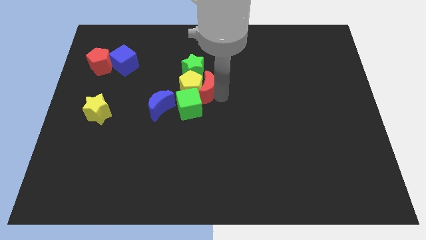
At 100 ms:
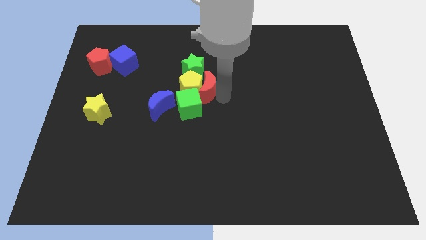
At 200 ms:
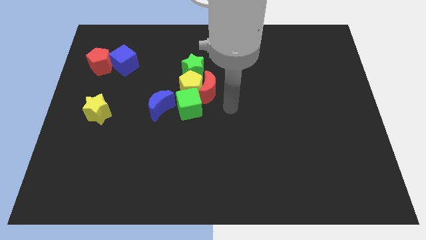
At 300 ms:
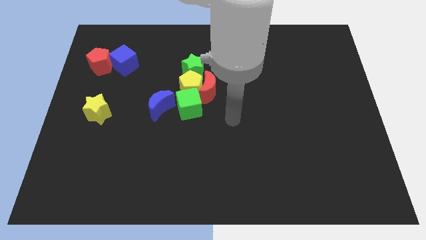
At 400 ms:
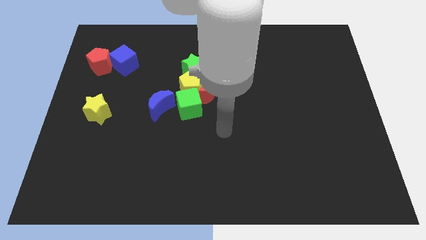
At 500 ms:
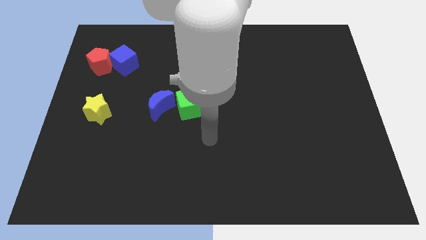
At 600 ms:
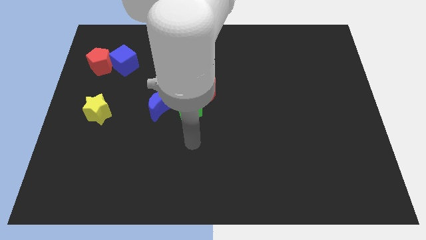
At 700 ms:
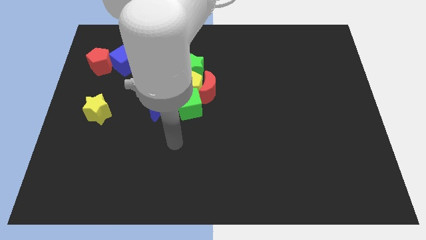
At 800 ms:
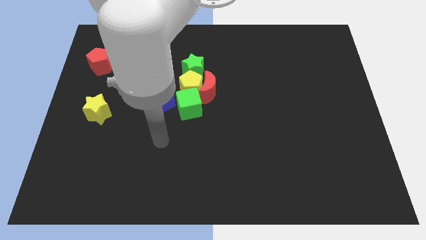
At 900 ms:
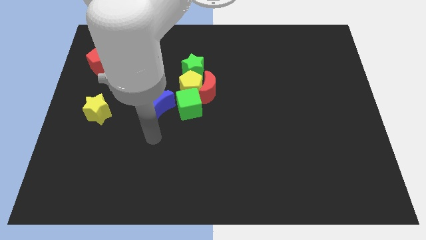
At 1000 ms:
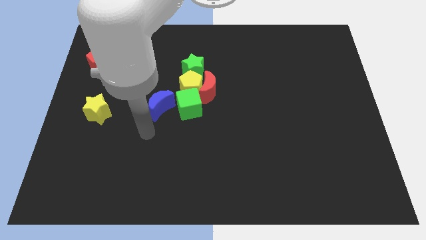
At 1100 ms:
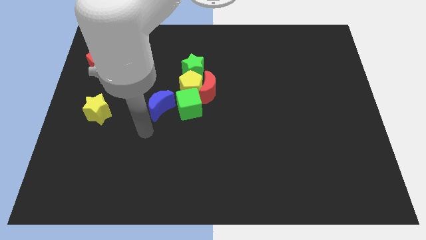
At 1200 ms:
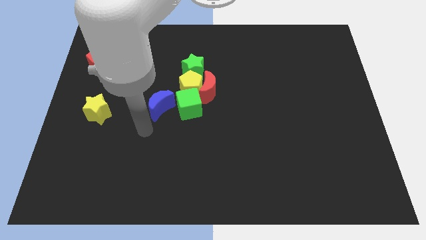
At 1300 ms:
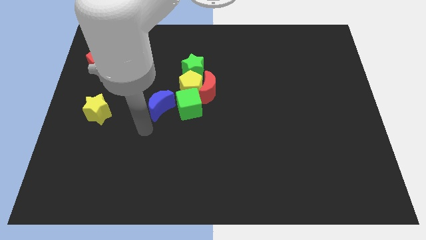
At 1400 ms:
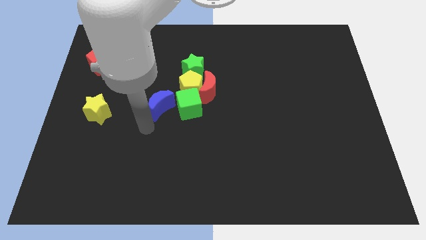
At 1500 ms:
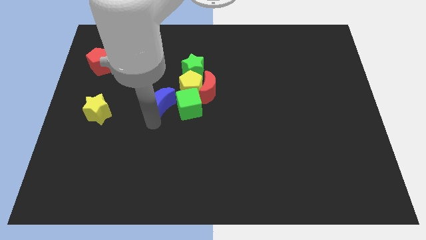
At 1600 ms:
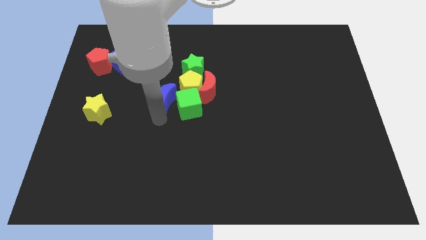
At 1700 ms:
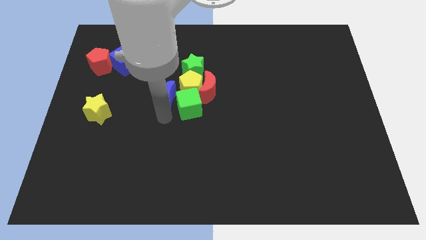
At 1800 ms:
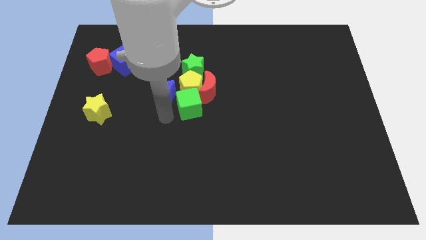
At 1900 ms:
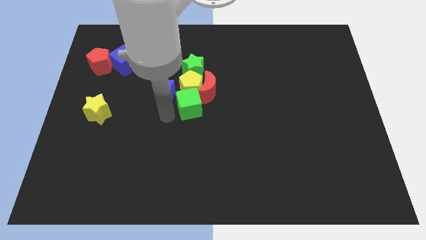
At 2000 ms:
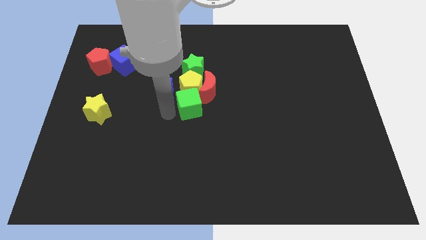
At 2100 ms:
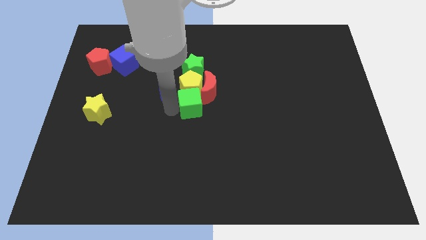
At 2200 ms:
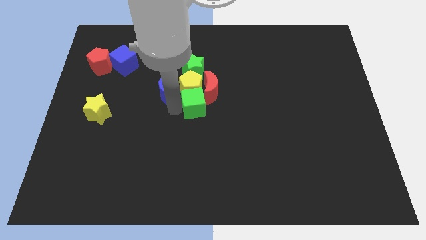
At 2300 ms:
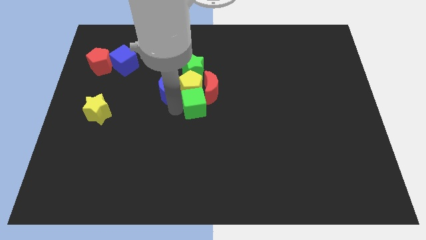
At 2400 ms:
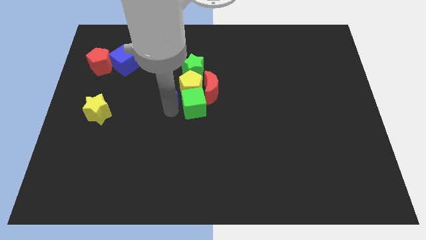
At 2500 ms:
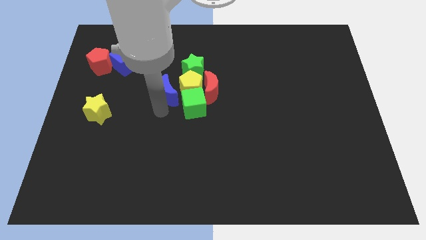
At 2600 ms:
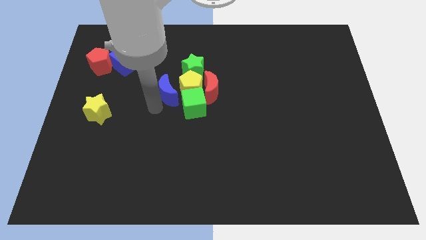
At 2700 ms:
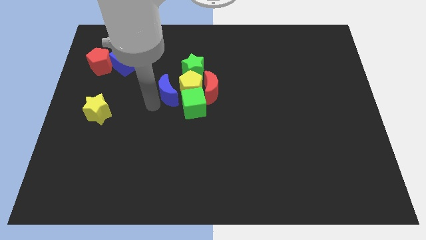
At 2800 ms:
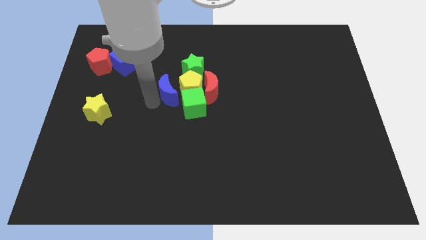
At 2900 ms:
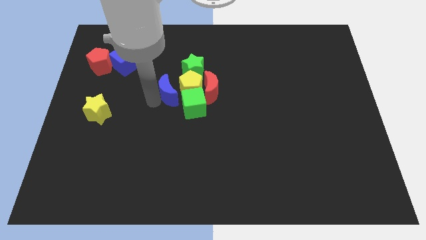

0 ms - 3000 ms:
place the blue crescent to the left of the yellow pentagon

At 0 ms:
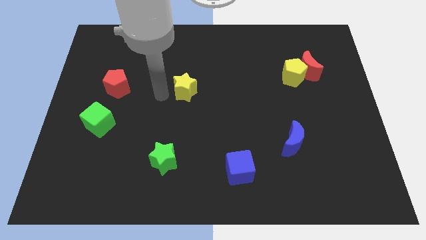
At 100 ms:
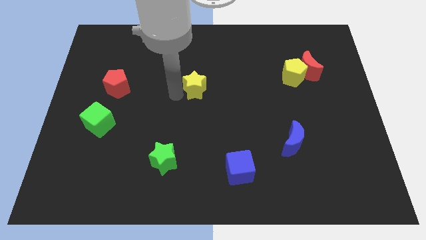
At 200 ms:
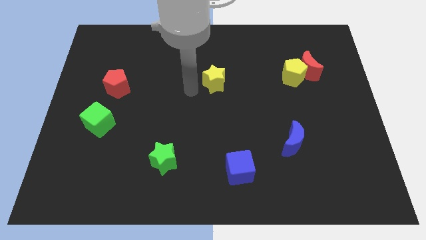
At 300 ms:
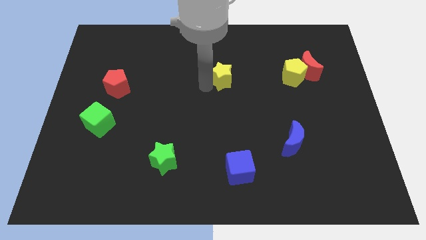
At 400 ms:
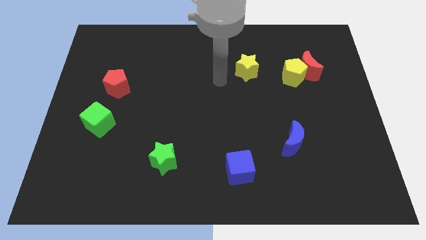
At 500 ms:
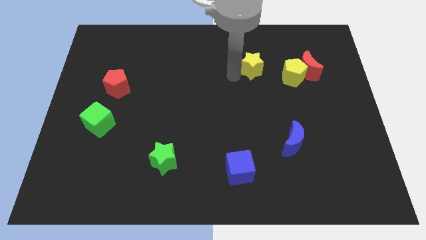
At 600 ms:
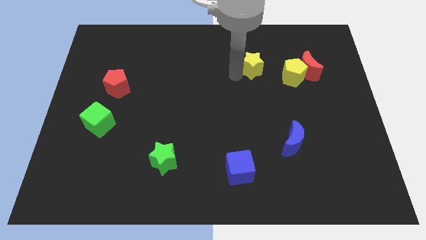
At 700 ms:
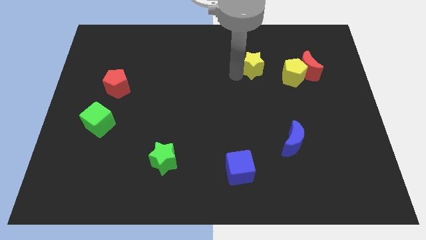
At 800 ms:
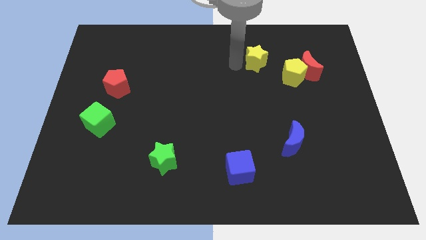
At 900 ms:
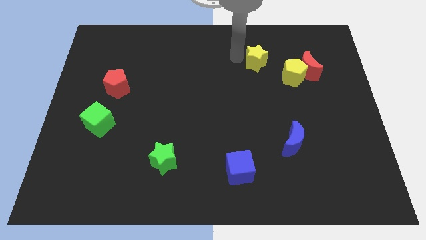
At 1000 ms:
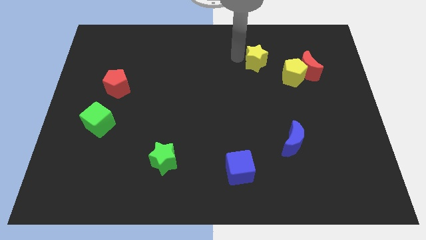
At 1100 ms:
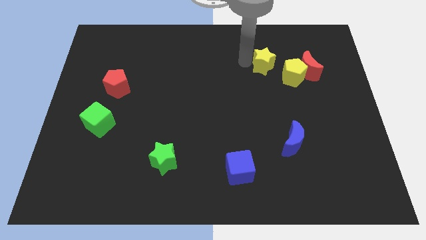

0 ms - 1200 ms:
move the yellow star diagonally to the top left of the yellow pentagon

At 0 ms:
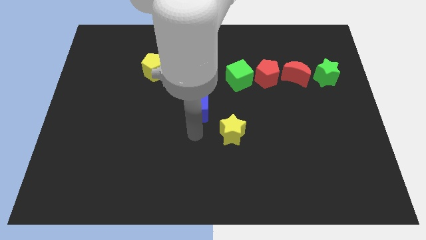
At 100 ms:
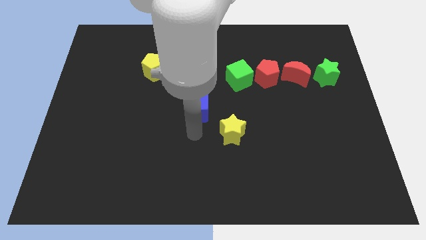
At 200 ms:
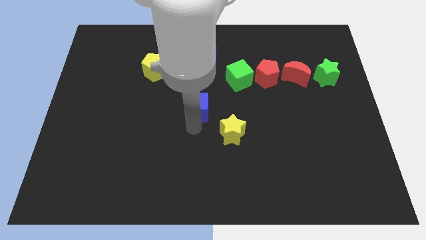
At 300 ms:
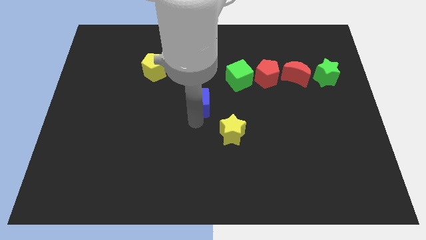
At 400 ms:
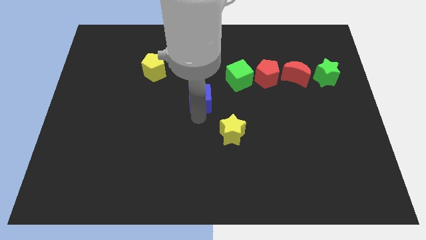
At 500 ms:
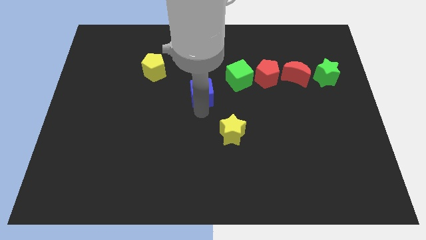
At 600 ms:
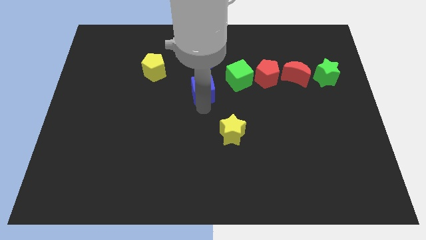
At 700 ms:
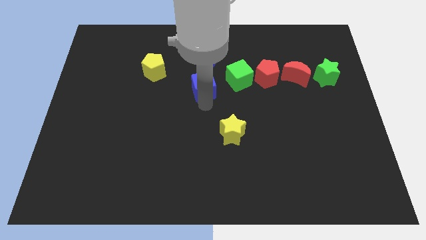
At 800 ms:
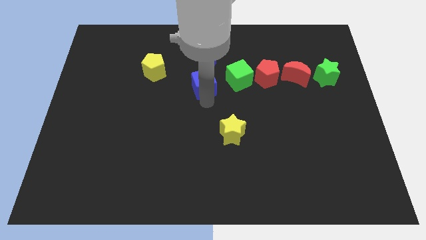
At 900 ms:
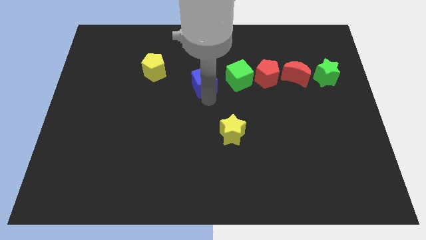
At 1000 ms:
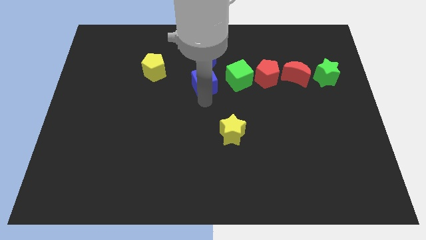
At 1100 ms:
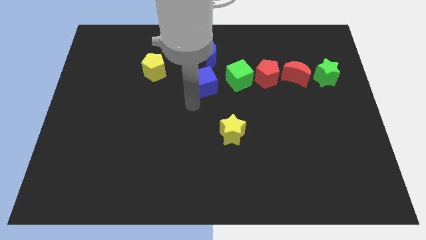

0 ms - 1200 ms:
place the blue cube to the left side of green cube

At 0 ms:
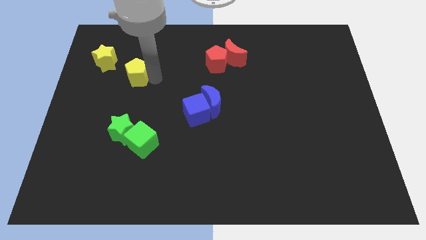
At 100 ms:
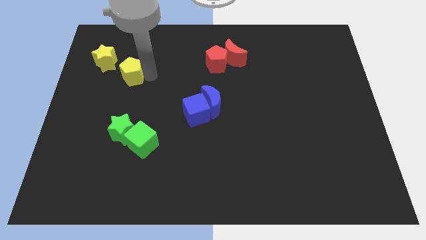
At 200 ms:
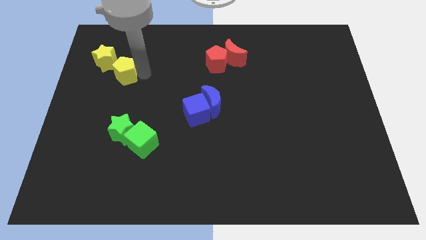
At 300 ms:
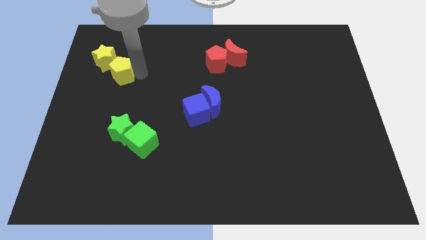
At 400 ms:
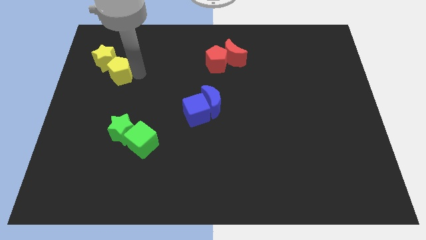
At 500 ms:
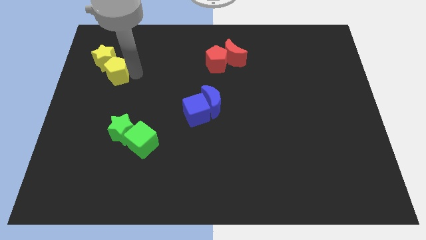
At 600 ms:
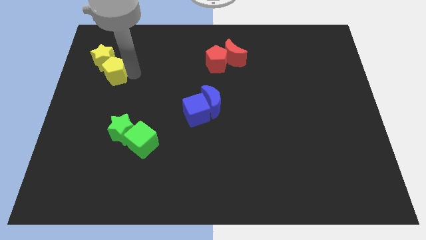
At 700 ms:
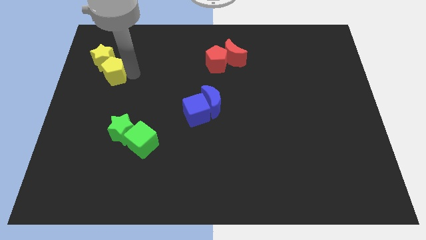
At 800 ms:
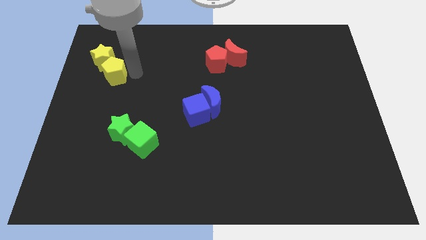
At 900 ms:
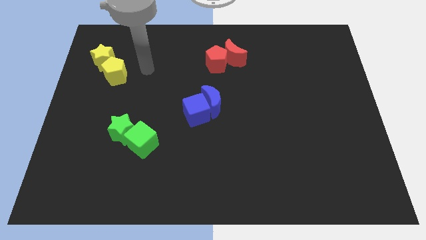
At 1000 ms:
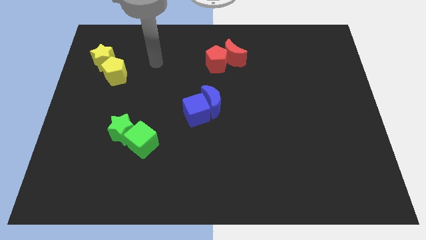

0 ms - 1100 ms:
push yellow pentagon into the yellow star

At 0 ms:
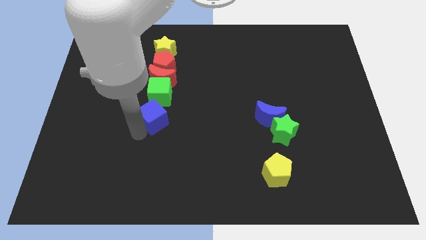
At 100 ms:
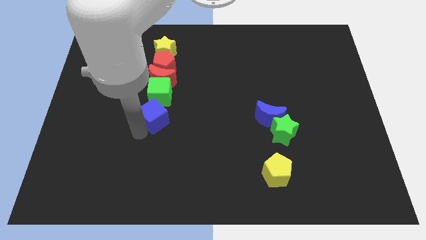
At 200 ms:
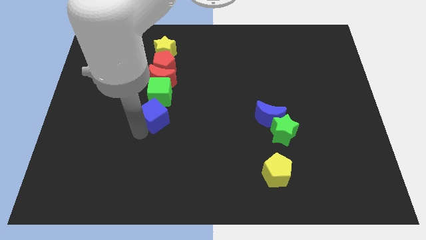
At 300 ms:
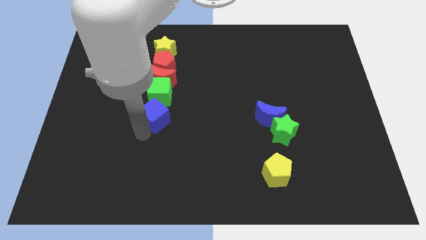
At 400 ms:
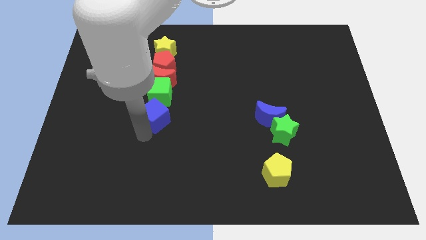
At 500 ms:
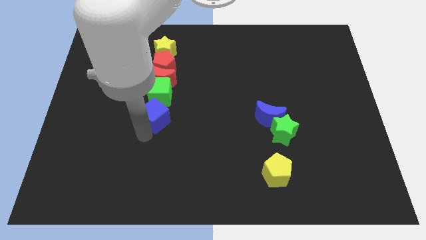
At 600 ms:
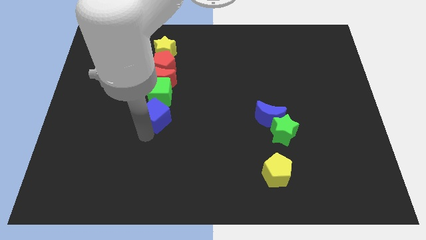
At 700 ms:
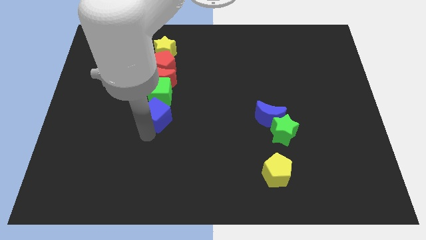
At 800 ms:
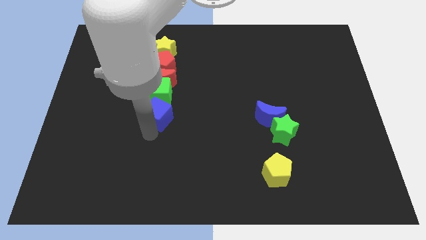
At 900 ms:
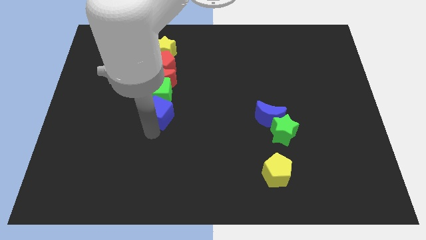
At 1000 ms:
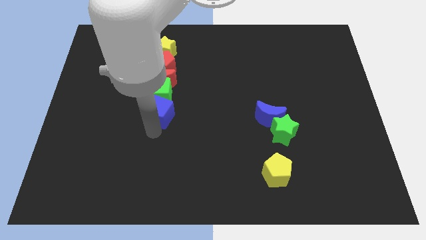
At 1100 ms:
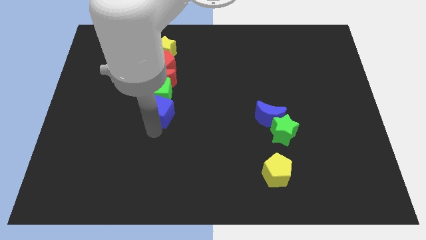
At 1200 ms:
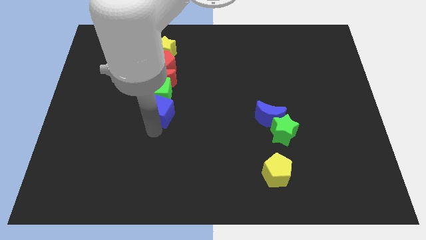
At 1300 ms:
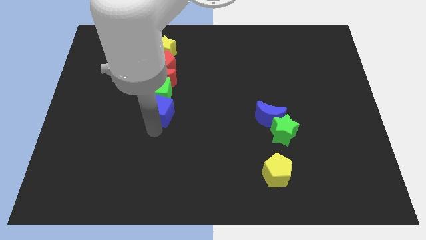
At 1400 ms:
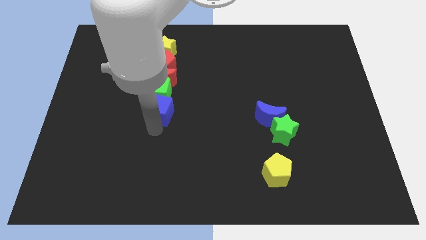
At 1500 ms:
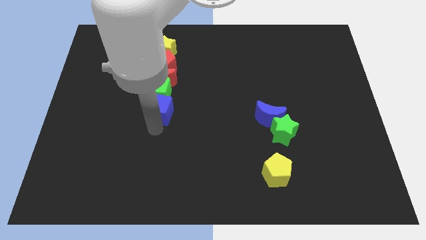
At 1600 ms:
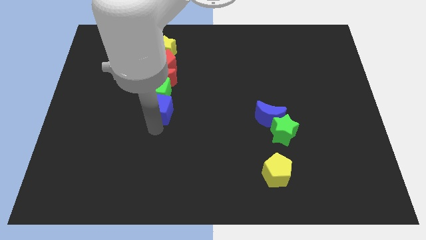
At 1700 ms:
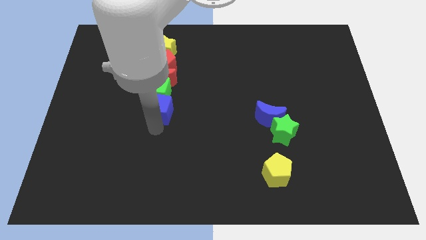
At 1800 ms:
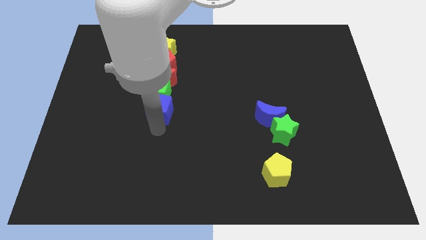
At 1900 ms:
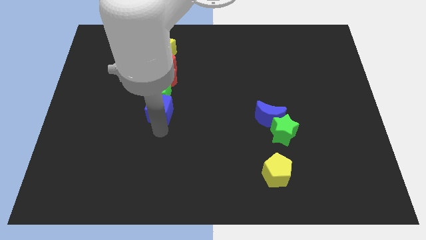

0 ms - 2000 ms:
place the blue cube at the bottom side of the green cube

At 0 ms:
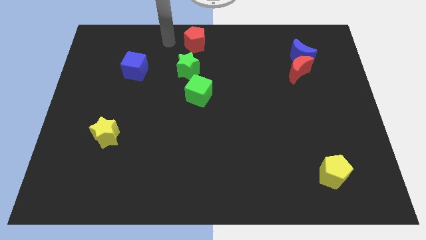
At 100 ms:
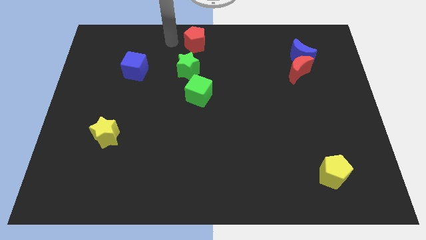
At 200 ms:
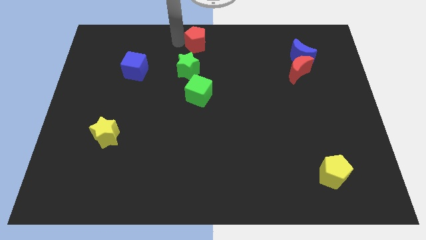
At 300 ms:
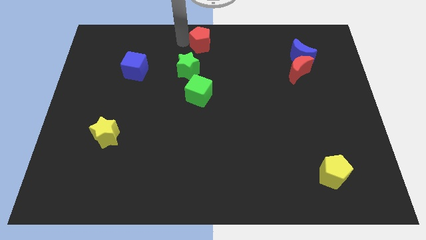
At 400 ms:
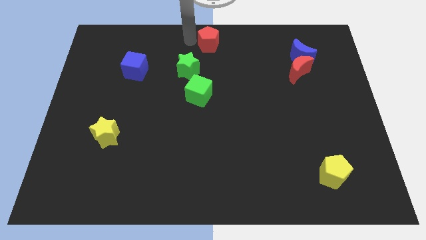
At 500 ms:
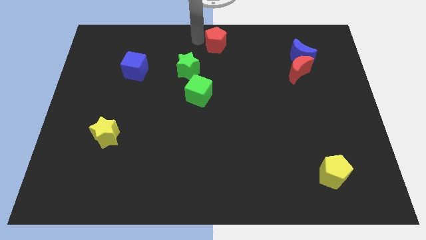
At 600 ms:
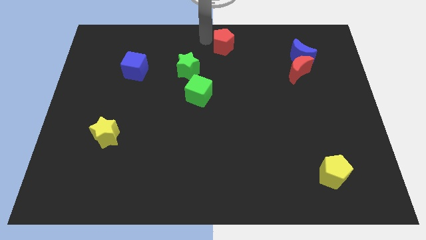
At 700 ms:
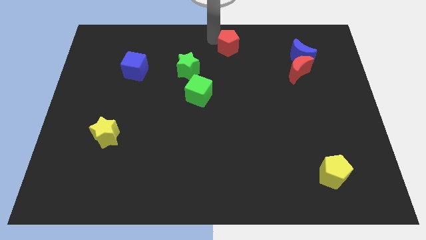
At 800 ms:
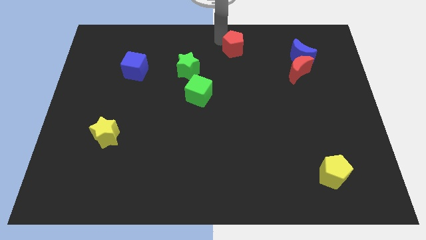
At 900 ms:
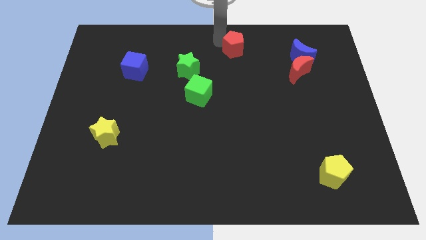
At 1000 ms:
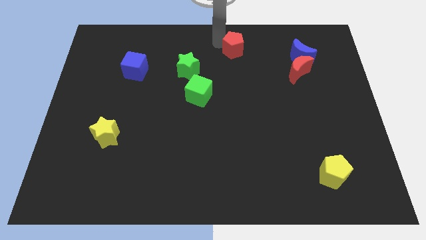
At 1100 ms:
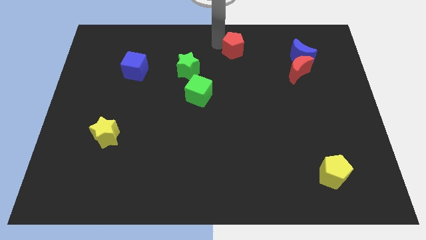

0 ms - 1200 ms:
slide the red pentagon slightly to the right
